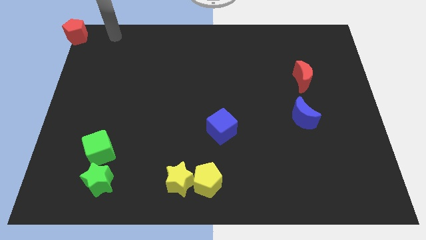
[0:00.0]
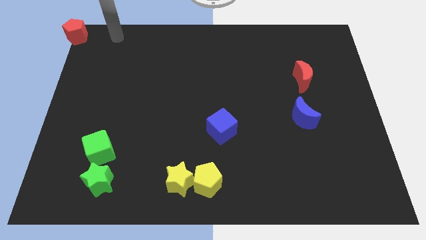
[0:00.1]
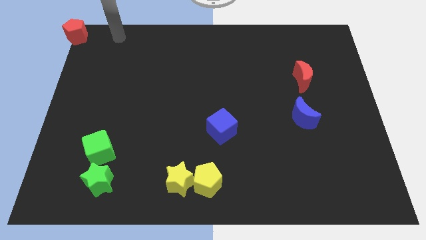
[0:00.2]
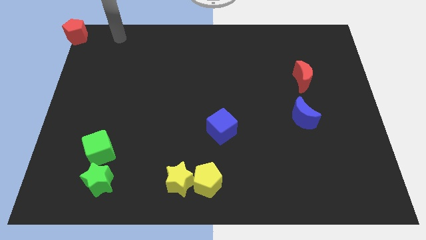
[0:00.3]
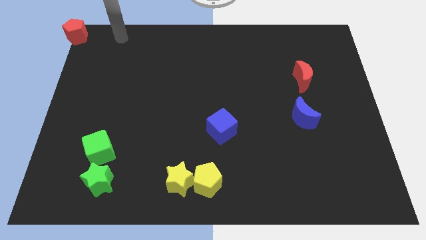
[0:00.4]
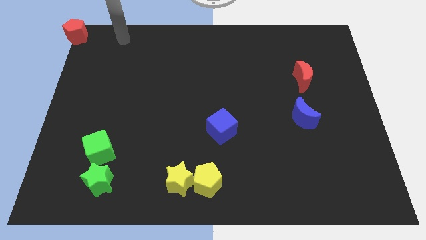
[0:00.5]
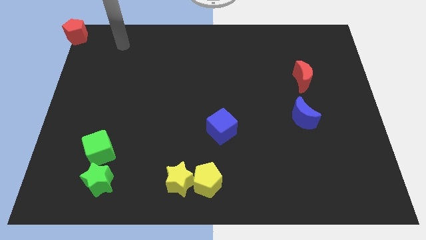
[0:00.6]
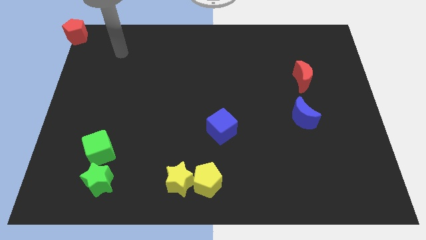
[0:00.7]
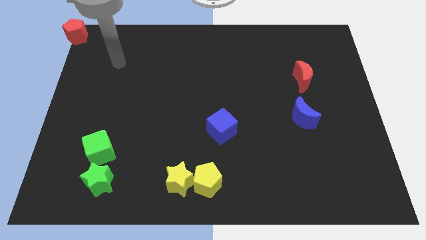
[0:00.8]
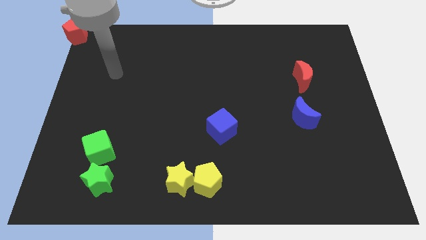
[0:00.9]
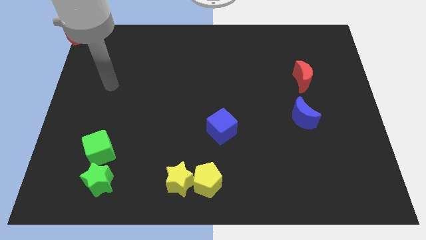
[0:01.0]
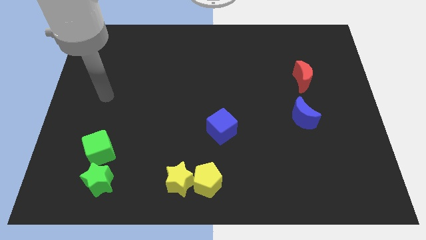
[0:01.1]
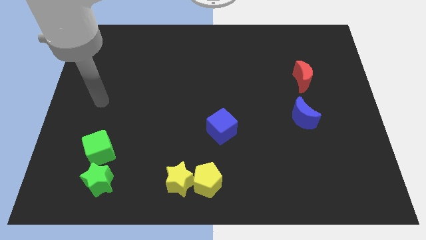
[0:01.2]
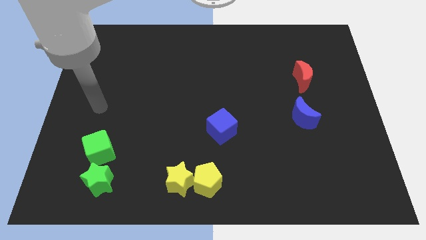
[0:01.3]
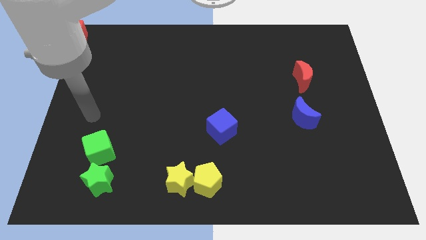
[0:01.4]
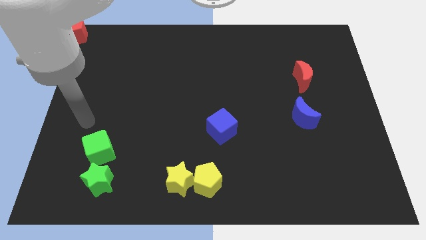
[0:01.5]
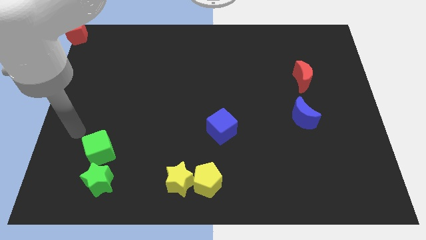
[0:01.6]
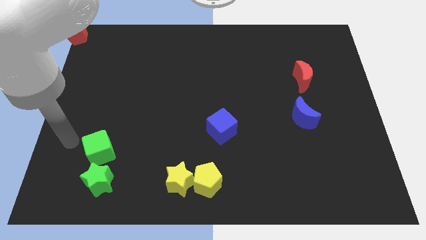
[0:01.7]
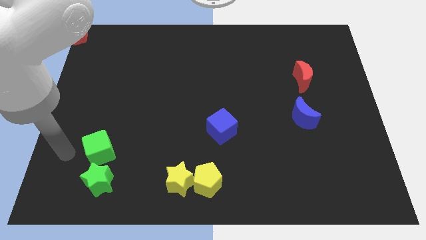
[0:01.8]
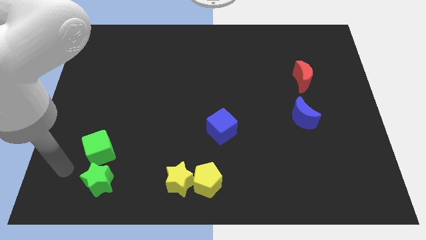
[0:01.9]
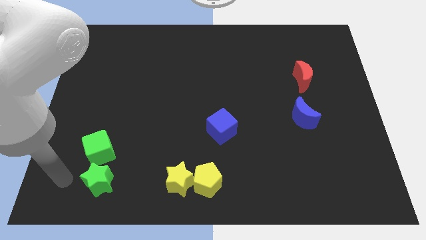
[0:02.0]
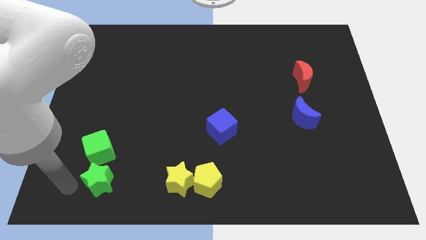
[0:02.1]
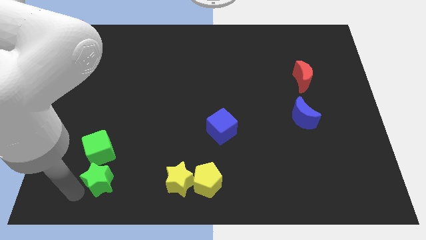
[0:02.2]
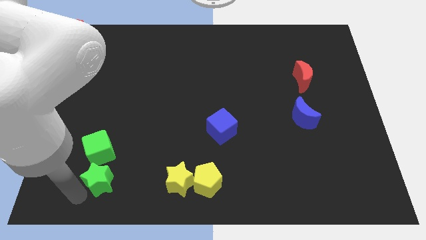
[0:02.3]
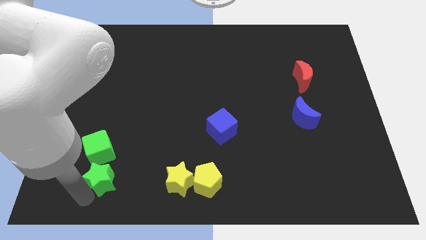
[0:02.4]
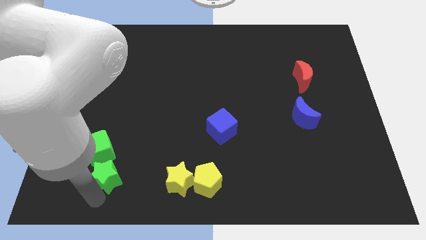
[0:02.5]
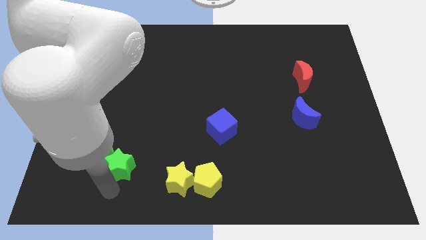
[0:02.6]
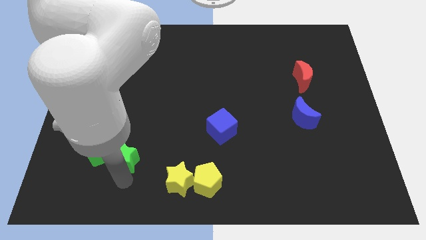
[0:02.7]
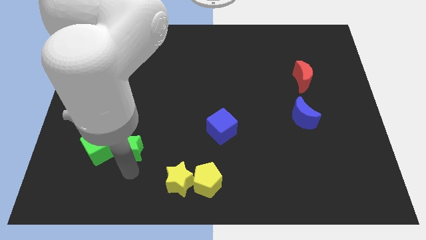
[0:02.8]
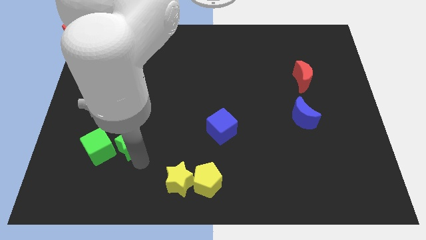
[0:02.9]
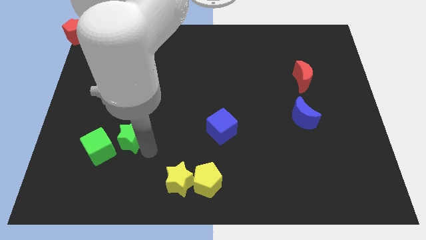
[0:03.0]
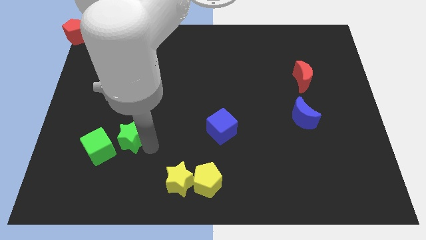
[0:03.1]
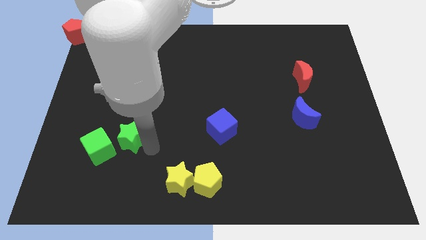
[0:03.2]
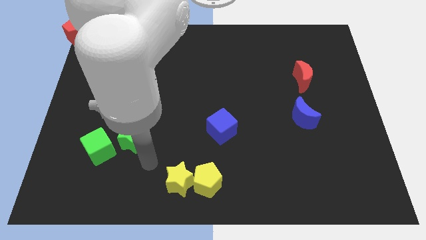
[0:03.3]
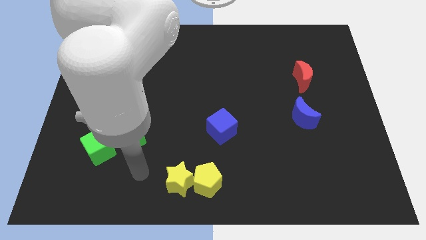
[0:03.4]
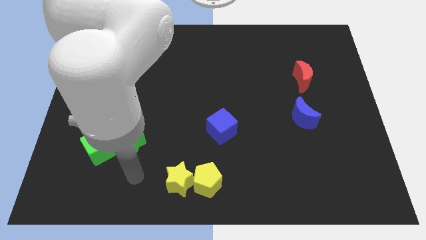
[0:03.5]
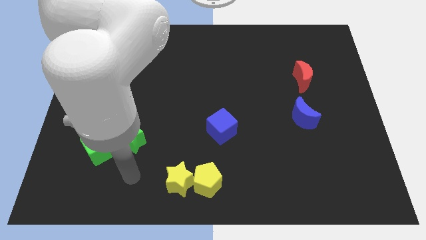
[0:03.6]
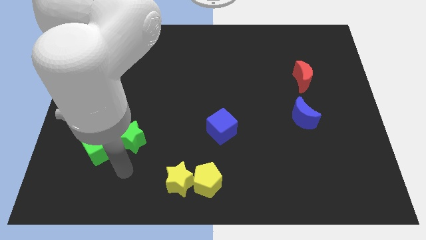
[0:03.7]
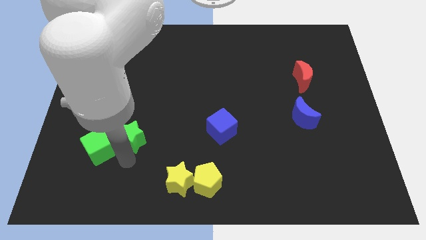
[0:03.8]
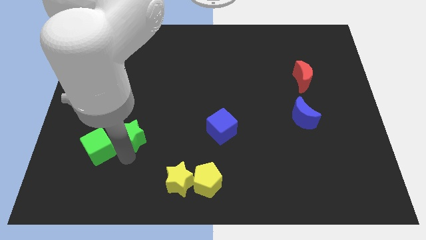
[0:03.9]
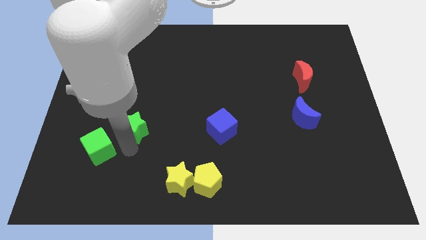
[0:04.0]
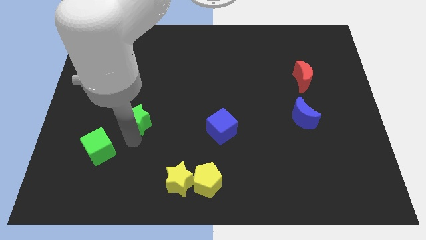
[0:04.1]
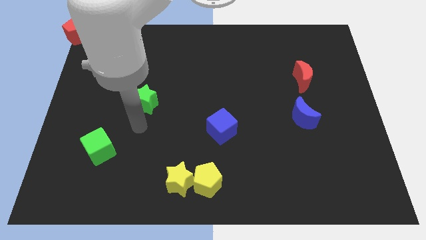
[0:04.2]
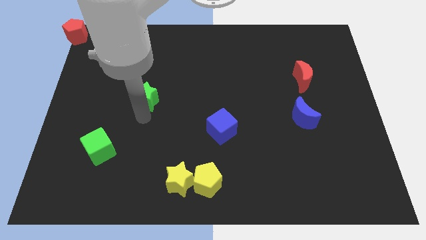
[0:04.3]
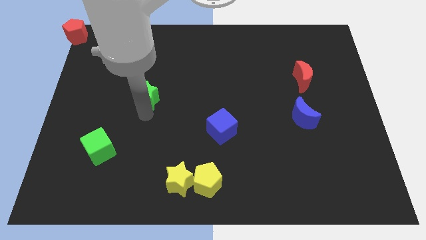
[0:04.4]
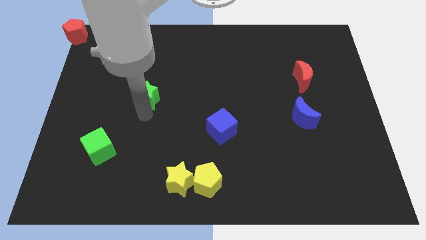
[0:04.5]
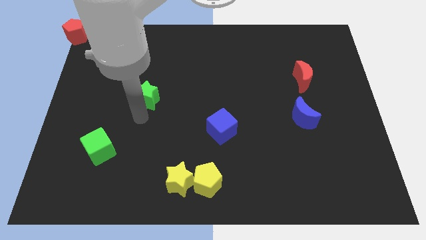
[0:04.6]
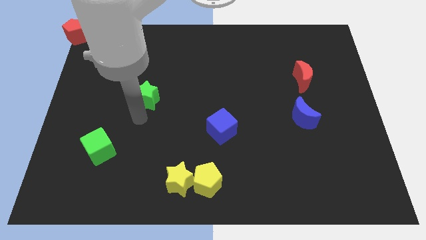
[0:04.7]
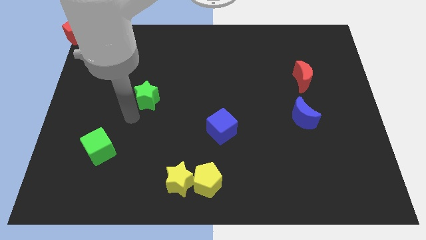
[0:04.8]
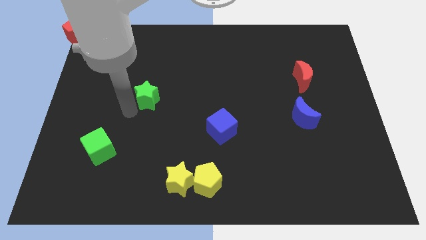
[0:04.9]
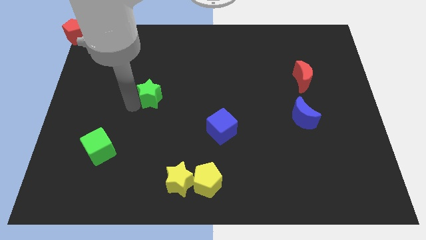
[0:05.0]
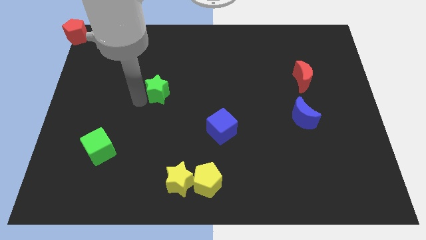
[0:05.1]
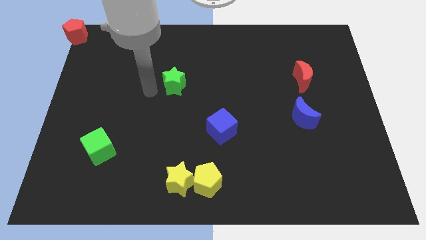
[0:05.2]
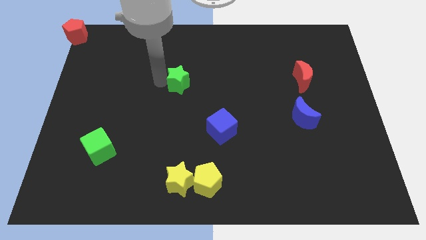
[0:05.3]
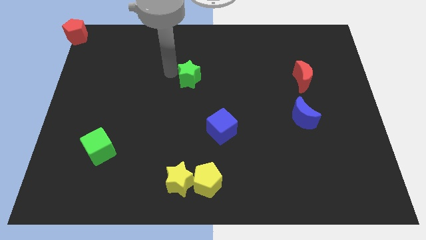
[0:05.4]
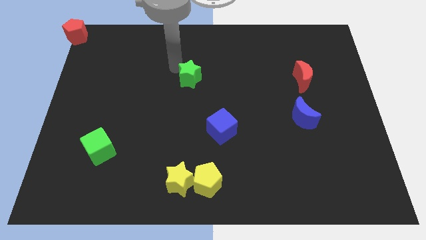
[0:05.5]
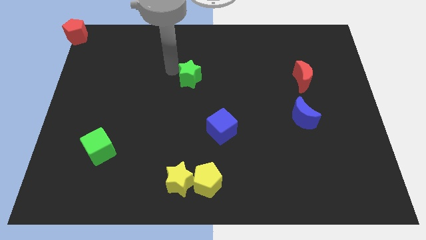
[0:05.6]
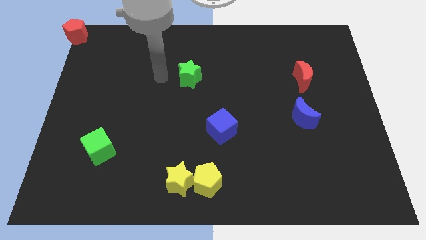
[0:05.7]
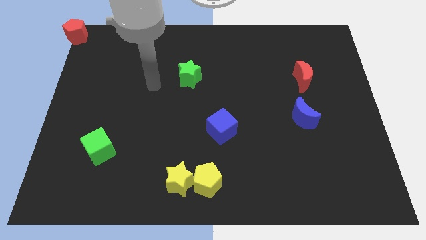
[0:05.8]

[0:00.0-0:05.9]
separate the green star from the green cube

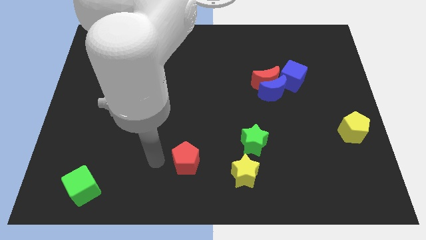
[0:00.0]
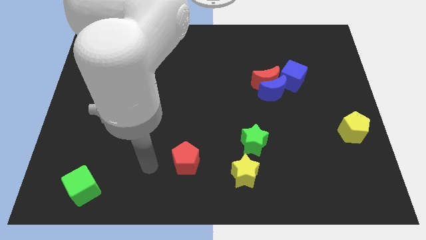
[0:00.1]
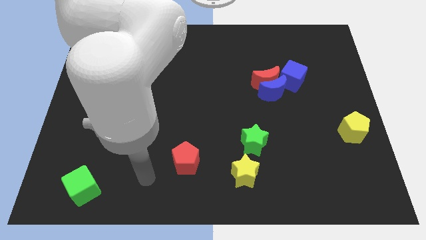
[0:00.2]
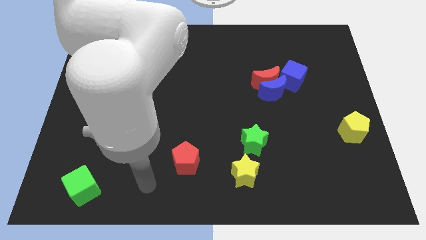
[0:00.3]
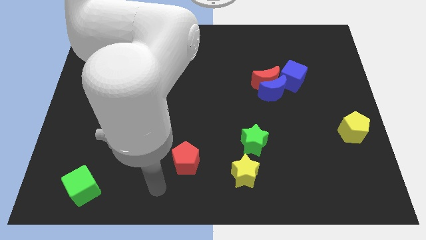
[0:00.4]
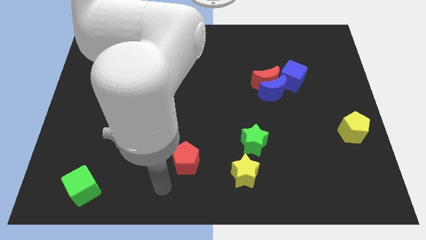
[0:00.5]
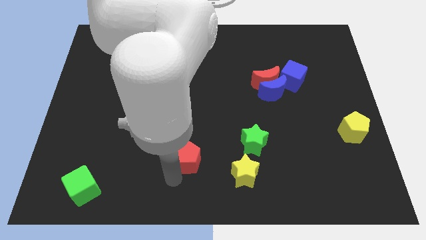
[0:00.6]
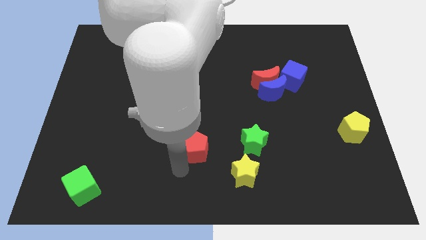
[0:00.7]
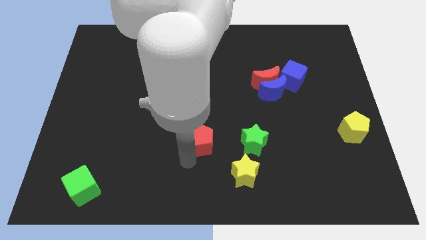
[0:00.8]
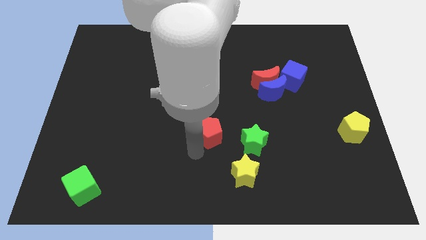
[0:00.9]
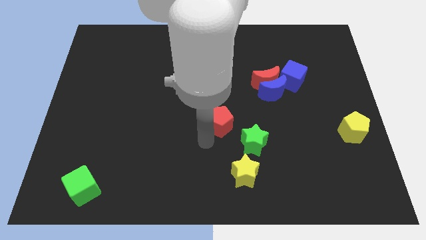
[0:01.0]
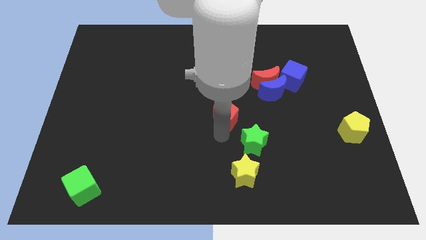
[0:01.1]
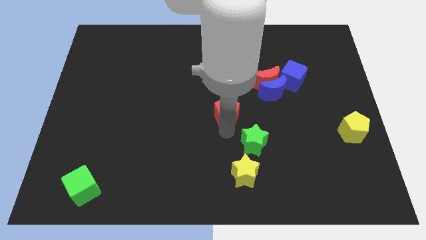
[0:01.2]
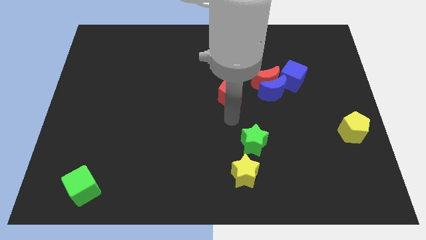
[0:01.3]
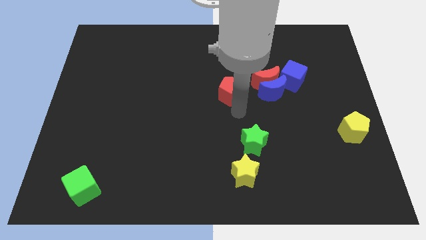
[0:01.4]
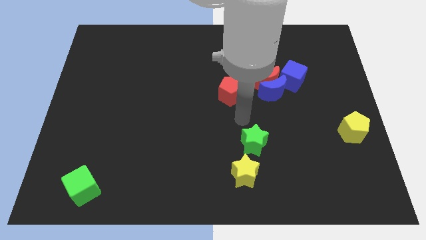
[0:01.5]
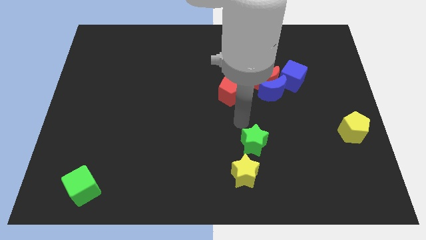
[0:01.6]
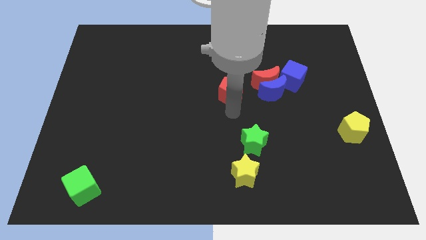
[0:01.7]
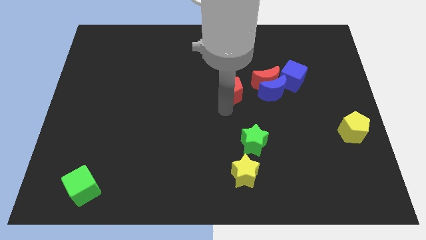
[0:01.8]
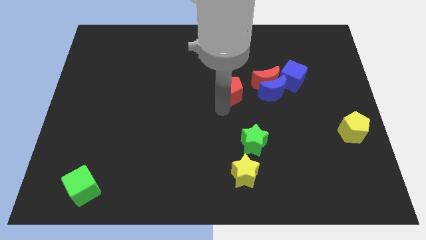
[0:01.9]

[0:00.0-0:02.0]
move the red pentagon towards the red crescent

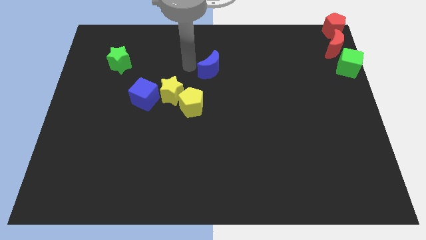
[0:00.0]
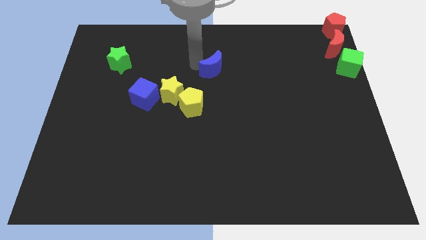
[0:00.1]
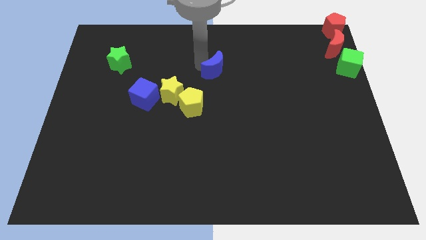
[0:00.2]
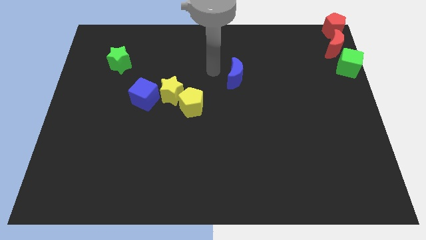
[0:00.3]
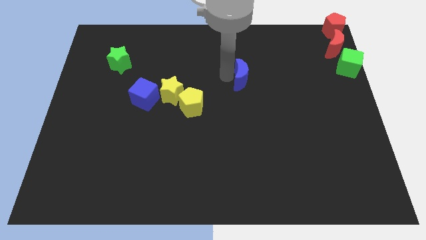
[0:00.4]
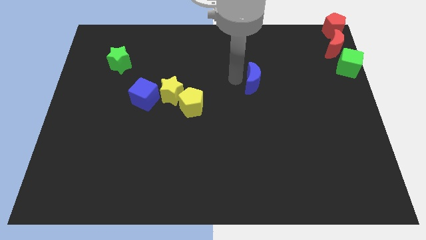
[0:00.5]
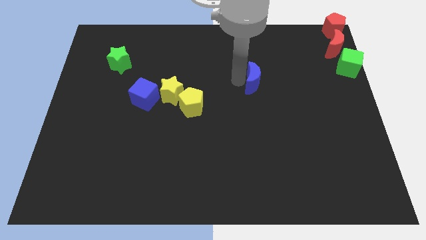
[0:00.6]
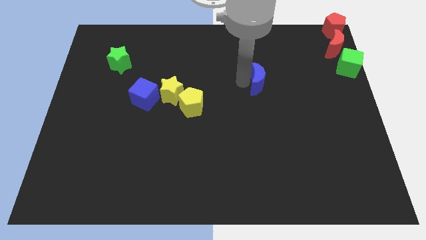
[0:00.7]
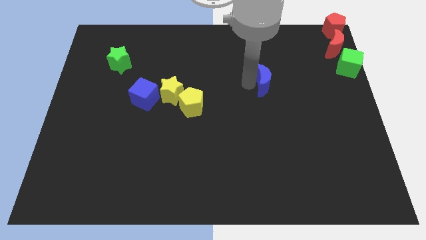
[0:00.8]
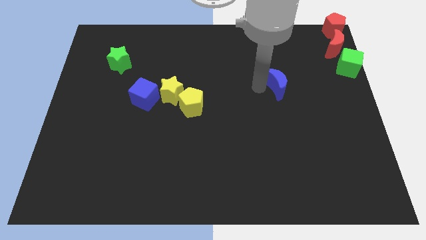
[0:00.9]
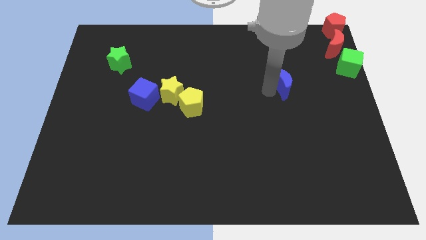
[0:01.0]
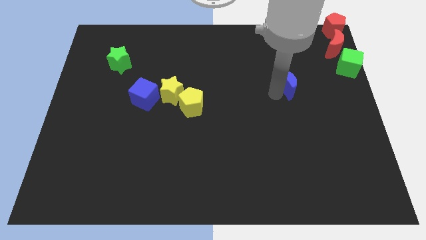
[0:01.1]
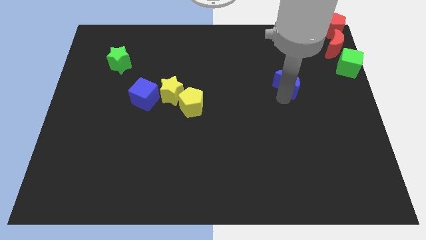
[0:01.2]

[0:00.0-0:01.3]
push the blue moon diagonal to the red moon
